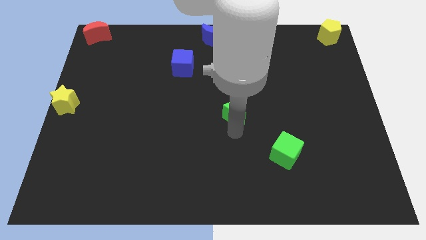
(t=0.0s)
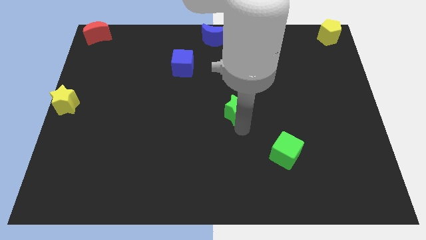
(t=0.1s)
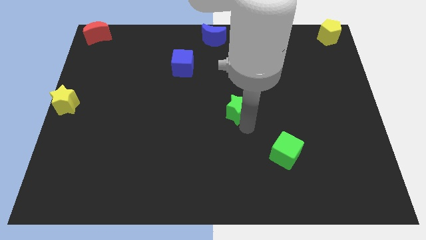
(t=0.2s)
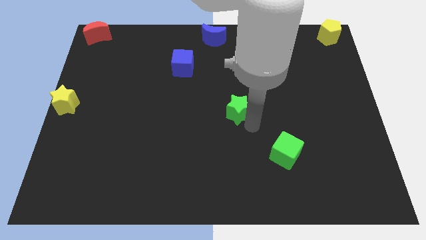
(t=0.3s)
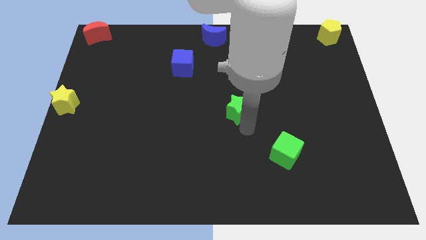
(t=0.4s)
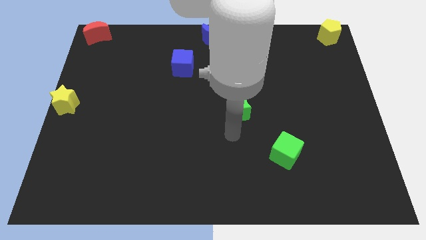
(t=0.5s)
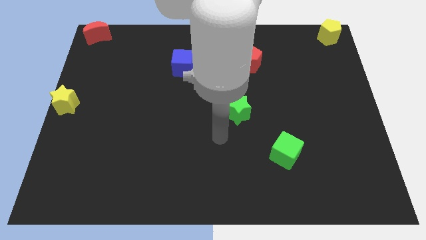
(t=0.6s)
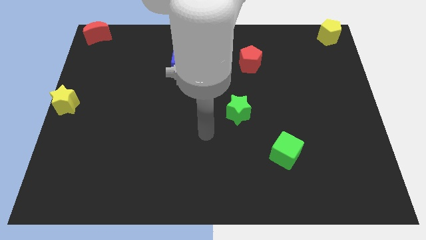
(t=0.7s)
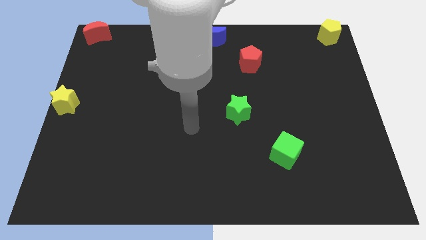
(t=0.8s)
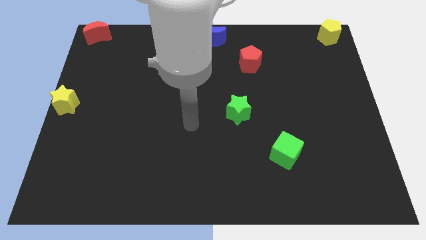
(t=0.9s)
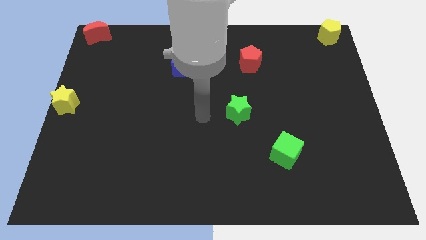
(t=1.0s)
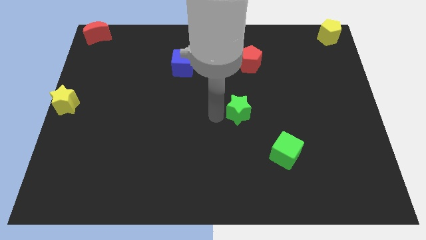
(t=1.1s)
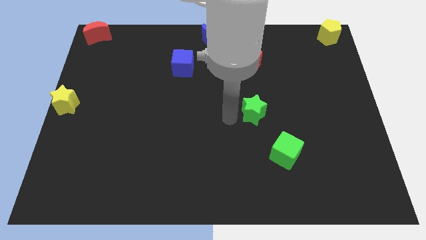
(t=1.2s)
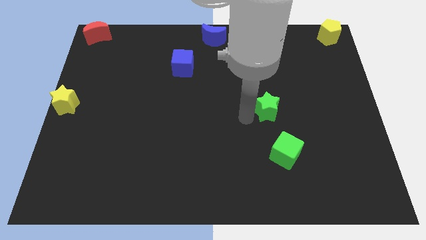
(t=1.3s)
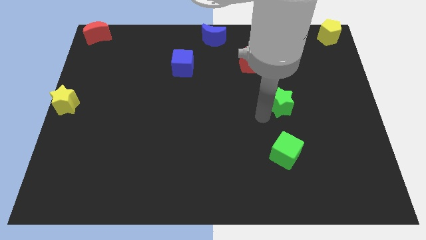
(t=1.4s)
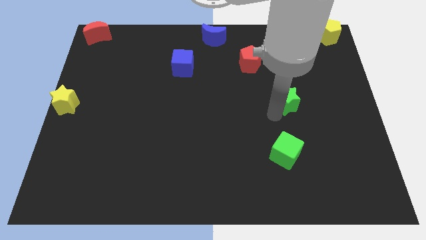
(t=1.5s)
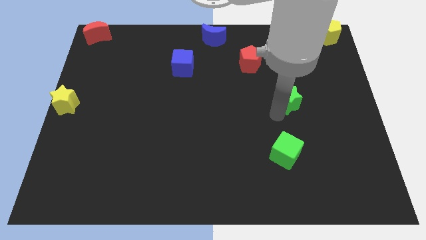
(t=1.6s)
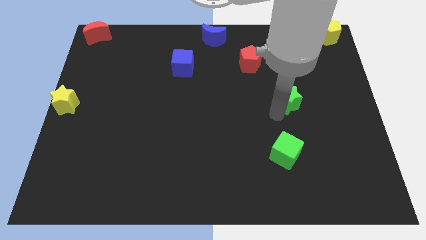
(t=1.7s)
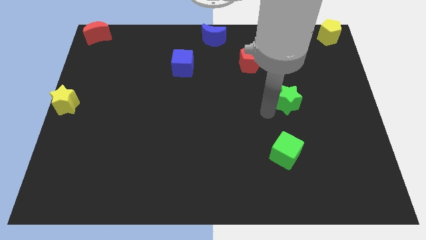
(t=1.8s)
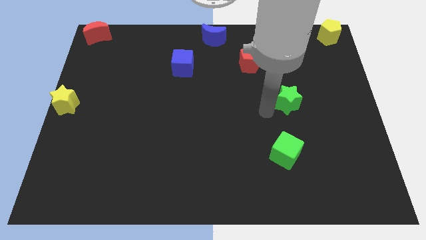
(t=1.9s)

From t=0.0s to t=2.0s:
move the green star vertically above the green cube

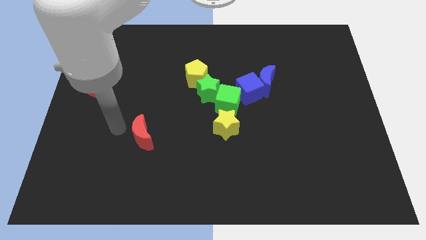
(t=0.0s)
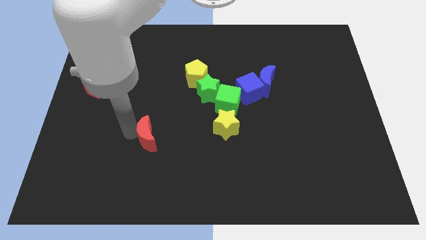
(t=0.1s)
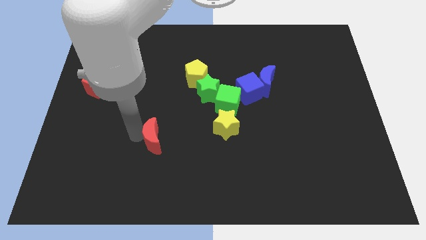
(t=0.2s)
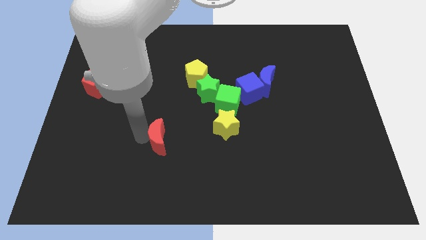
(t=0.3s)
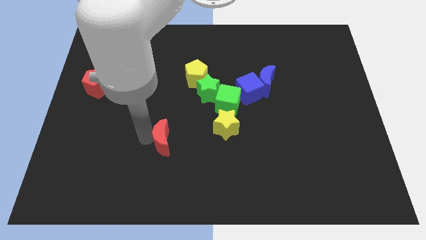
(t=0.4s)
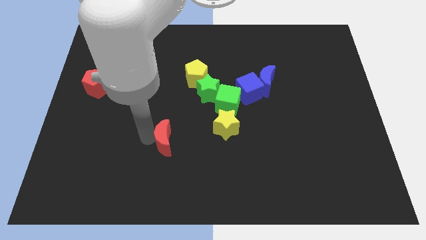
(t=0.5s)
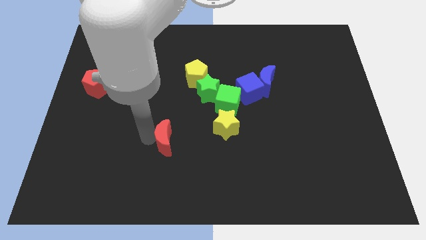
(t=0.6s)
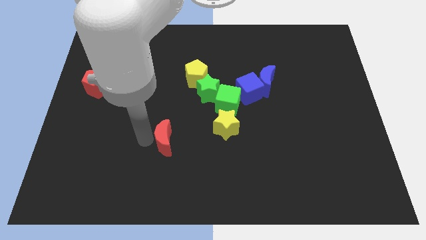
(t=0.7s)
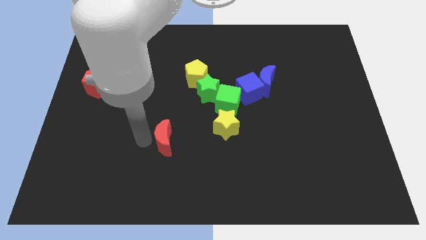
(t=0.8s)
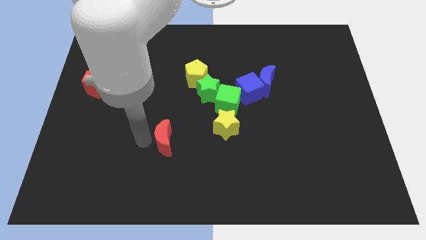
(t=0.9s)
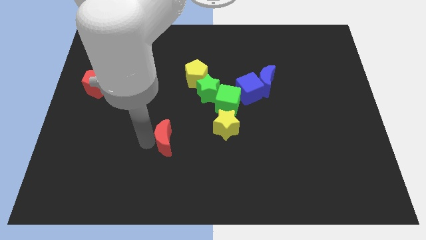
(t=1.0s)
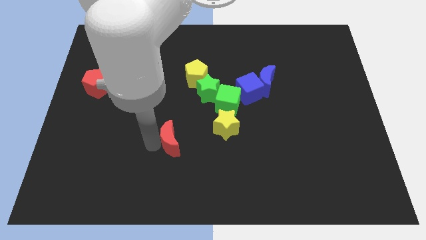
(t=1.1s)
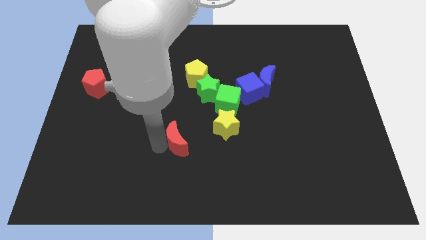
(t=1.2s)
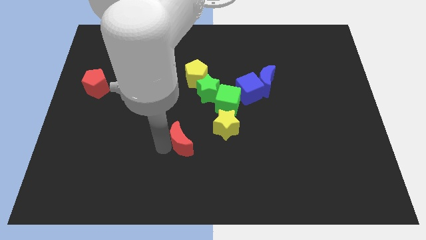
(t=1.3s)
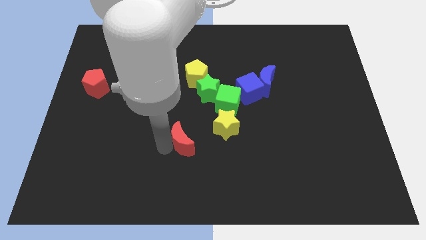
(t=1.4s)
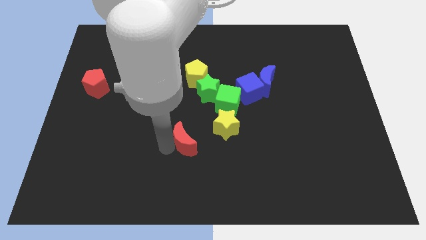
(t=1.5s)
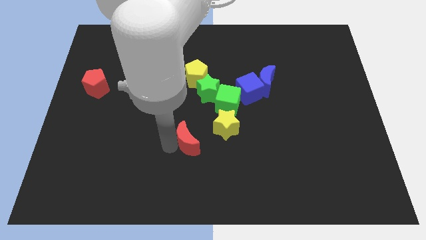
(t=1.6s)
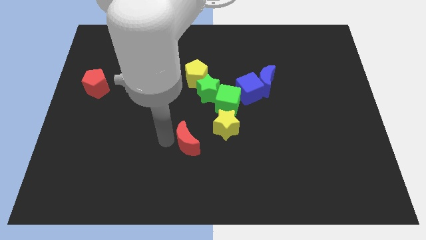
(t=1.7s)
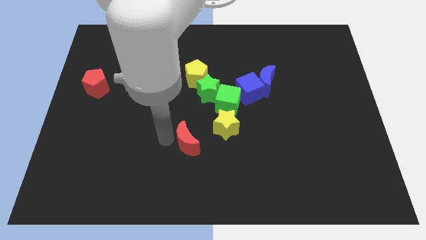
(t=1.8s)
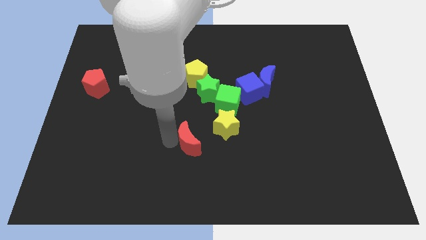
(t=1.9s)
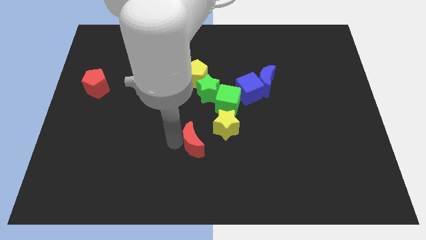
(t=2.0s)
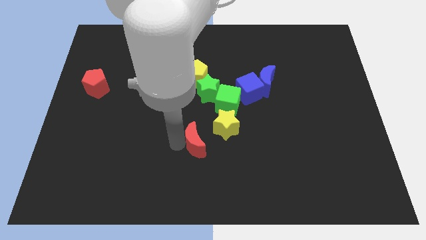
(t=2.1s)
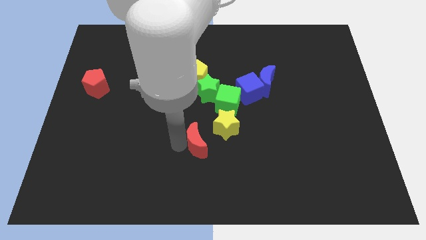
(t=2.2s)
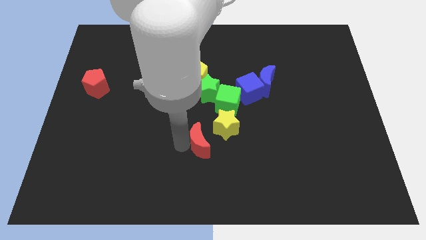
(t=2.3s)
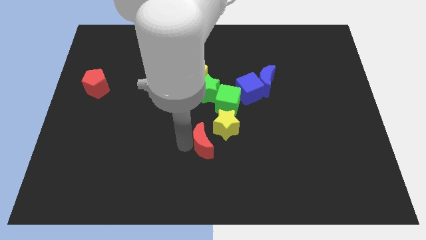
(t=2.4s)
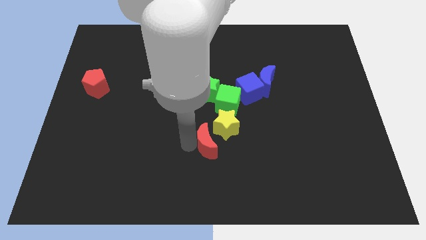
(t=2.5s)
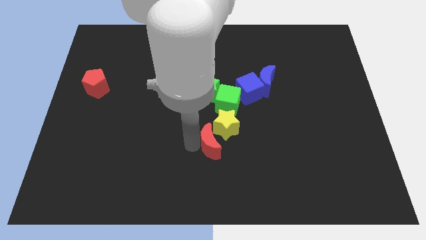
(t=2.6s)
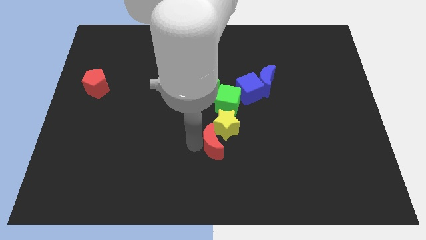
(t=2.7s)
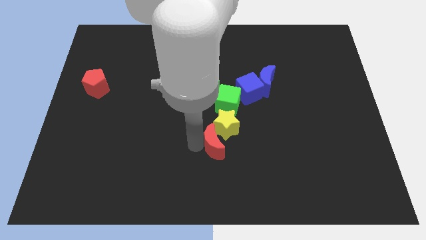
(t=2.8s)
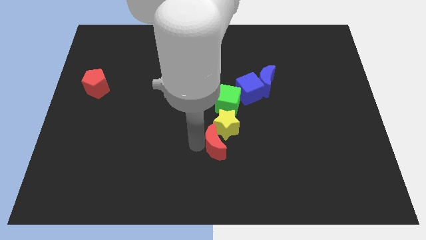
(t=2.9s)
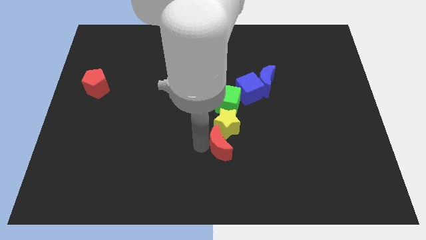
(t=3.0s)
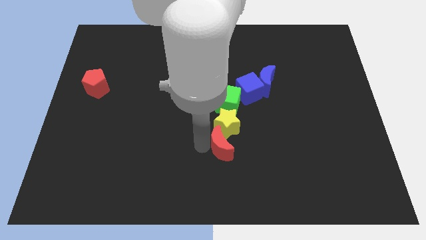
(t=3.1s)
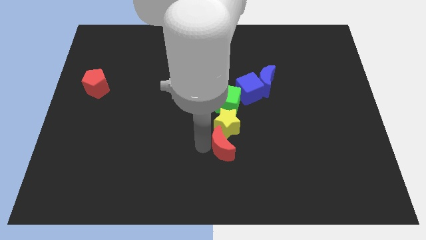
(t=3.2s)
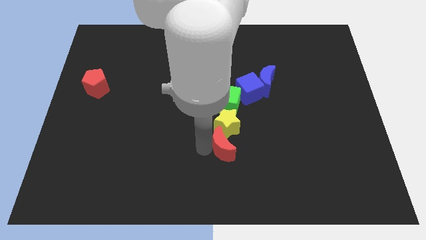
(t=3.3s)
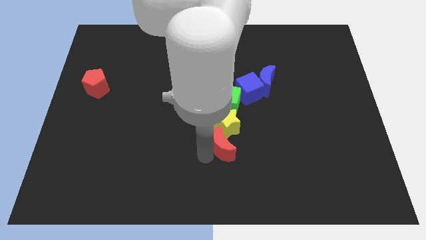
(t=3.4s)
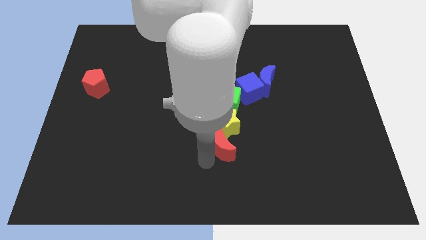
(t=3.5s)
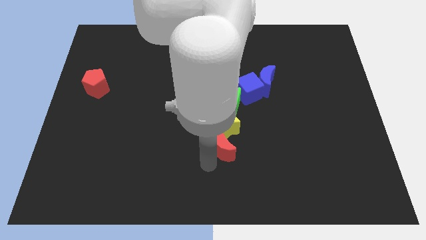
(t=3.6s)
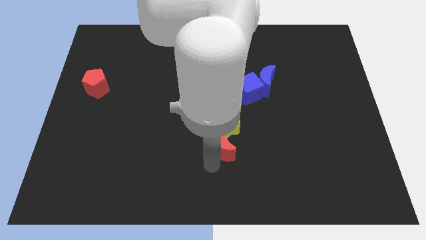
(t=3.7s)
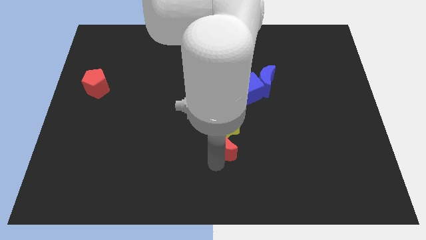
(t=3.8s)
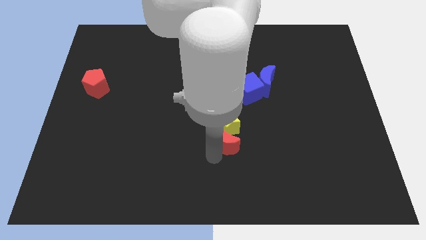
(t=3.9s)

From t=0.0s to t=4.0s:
place red moon to the bottom of yellow star

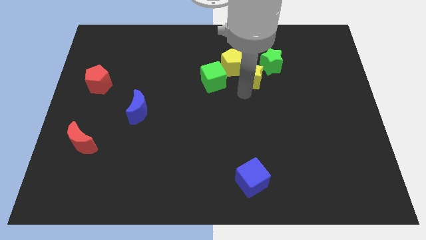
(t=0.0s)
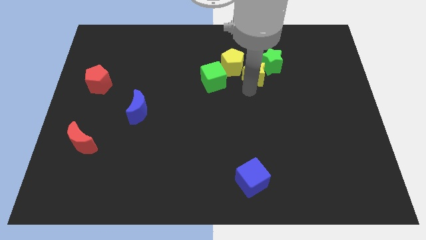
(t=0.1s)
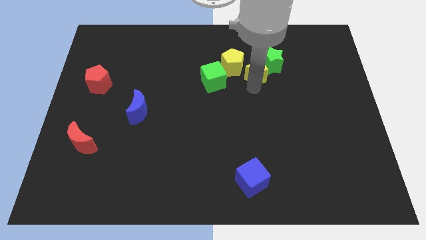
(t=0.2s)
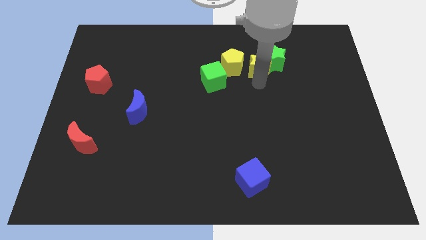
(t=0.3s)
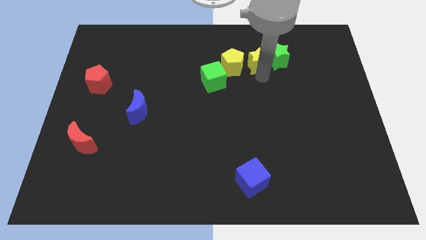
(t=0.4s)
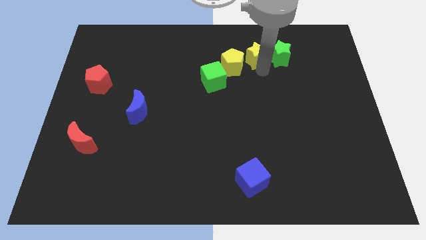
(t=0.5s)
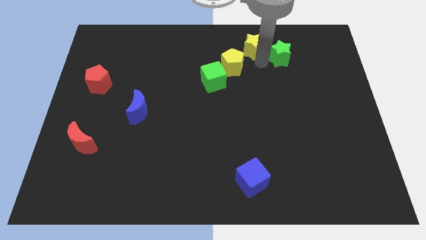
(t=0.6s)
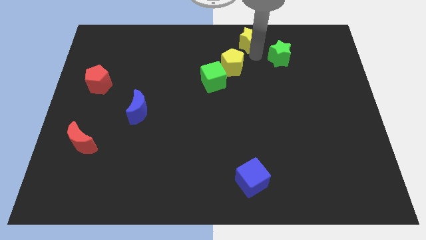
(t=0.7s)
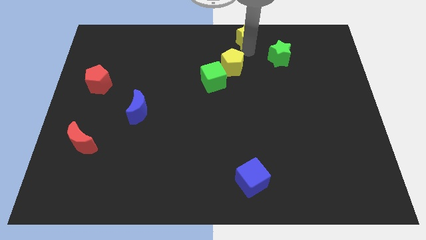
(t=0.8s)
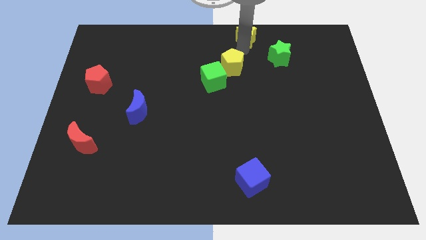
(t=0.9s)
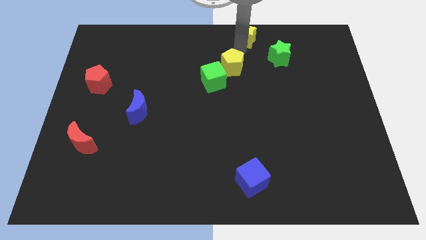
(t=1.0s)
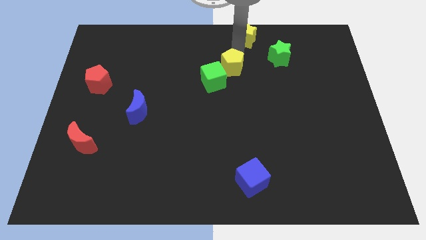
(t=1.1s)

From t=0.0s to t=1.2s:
push yellow star towards up

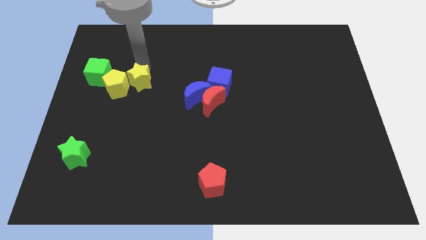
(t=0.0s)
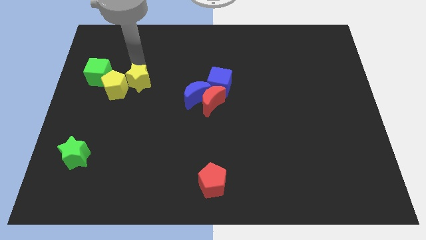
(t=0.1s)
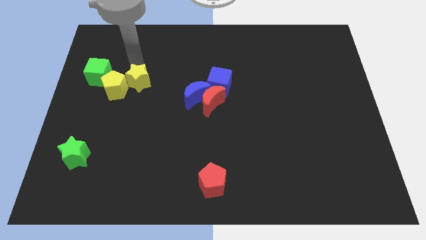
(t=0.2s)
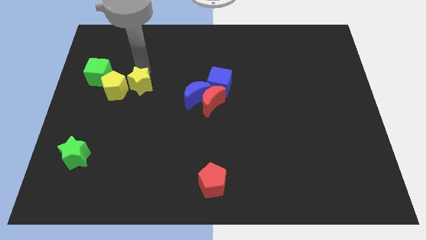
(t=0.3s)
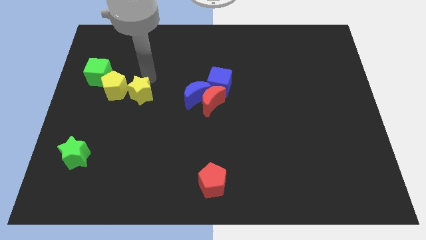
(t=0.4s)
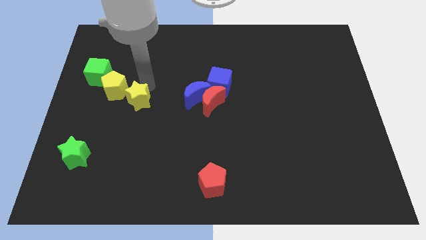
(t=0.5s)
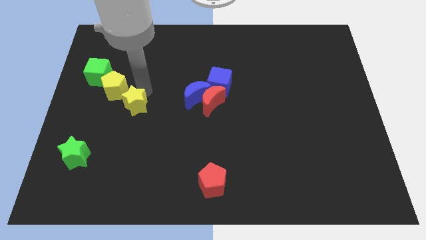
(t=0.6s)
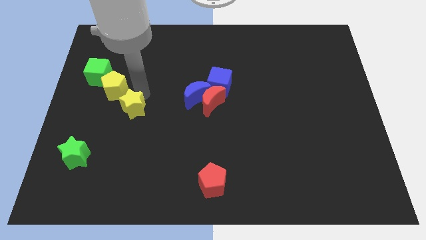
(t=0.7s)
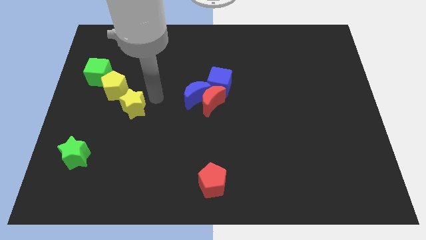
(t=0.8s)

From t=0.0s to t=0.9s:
push yellow star downwards

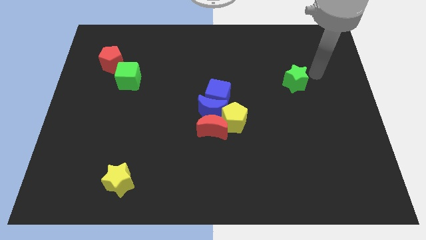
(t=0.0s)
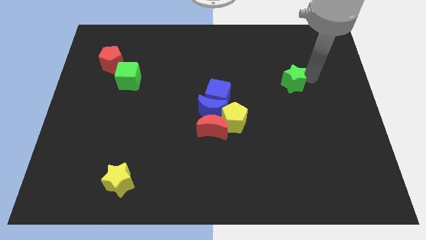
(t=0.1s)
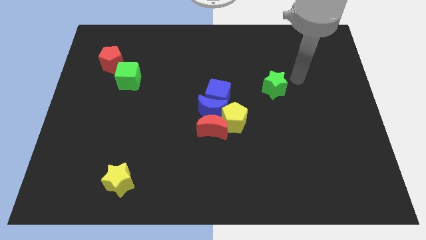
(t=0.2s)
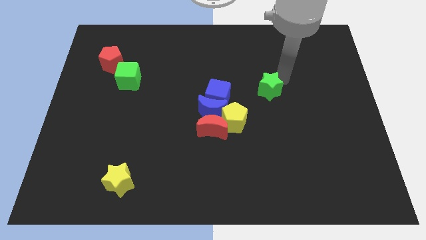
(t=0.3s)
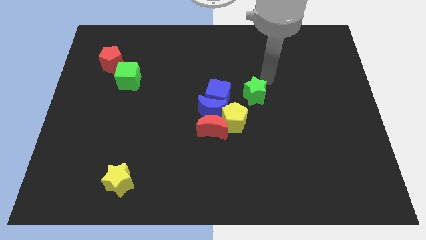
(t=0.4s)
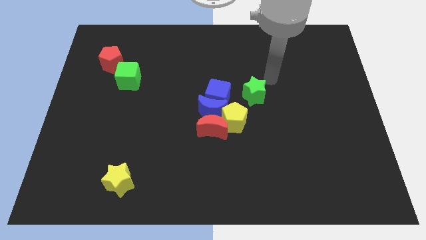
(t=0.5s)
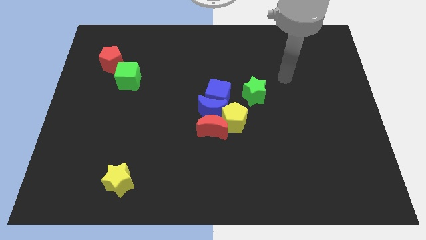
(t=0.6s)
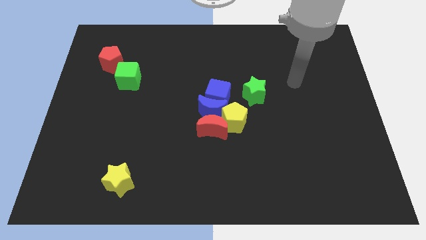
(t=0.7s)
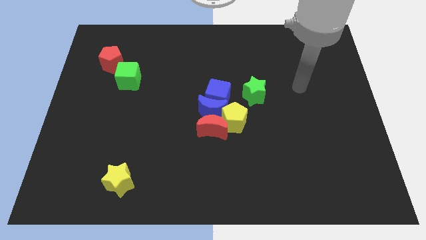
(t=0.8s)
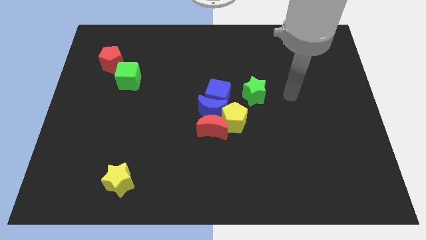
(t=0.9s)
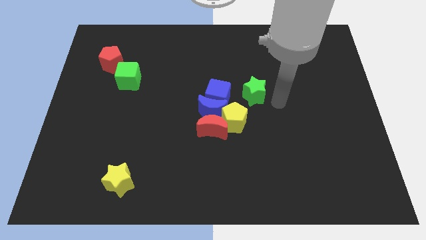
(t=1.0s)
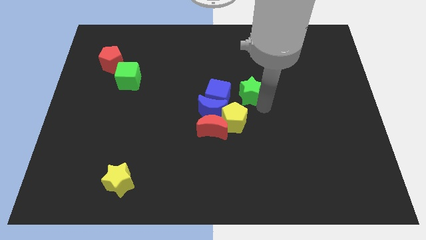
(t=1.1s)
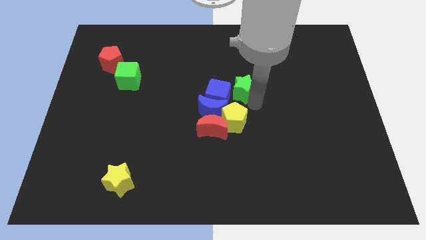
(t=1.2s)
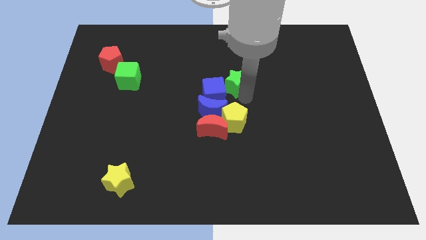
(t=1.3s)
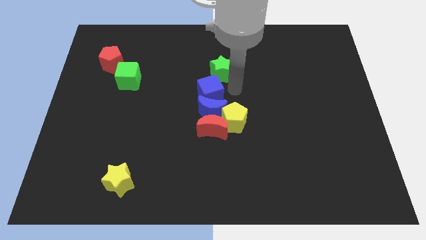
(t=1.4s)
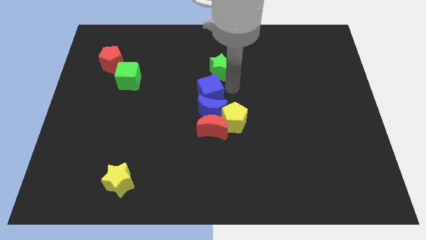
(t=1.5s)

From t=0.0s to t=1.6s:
place the green star above the blue cube
